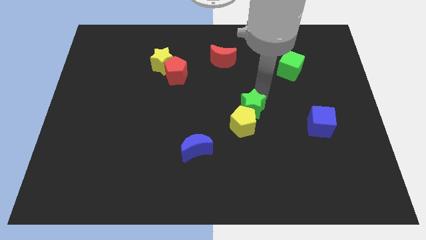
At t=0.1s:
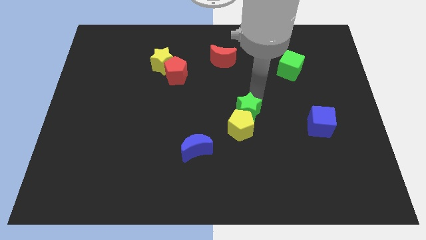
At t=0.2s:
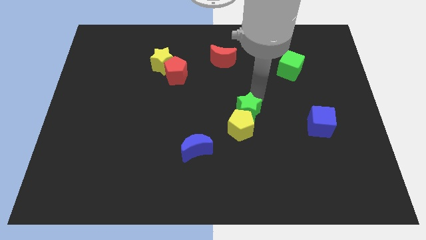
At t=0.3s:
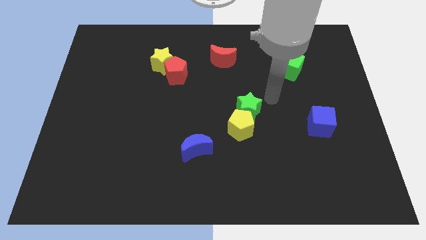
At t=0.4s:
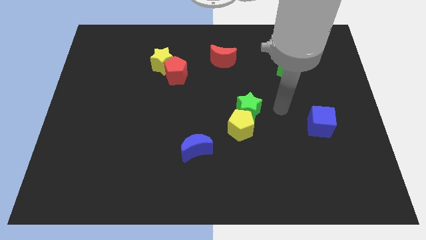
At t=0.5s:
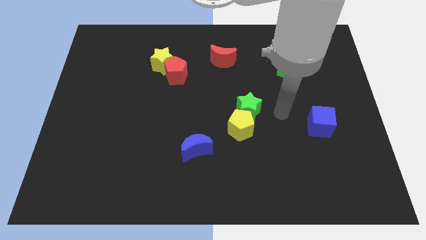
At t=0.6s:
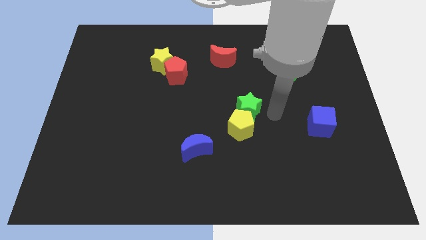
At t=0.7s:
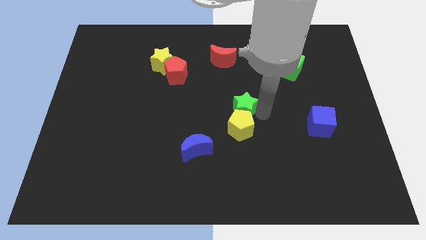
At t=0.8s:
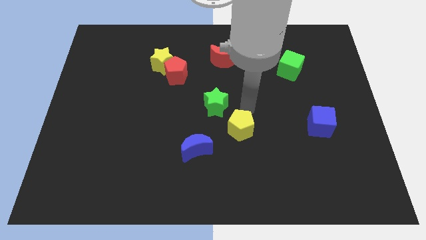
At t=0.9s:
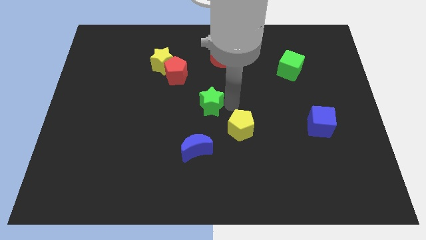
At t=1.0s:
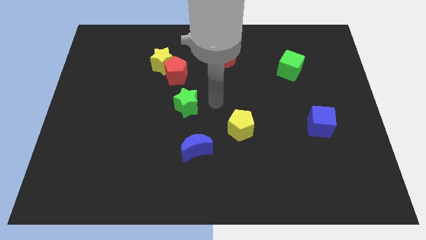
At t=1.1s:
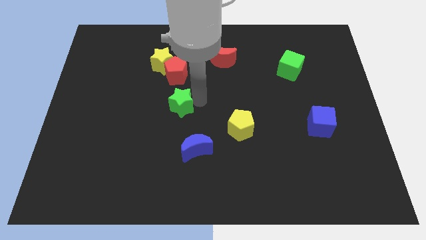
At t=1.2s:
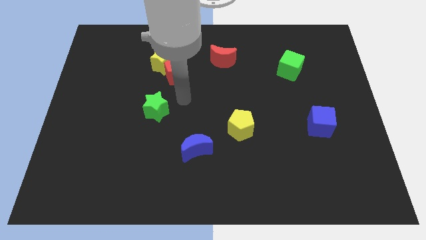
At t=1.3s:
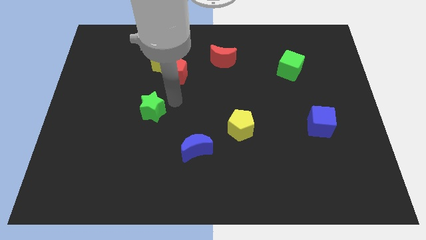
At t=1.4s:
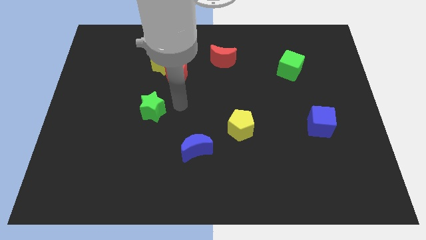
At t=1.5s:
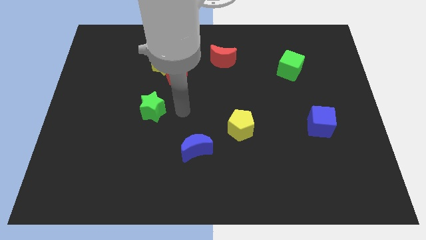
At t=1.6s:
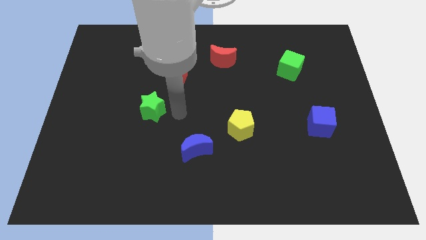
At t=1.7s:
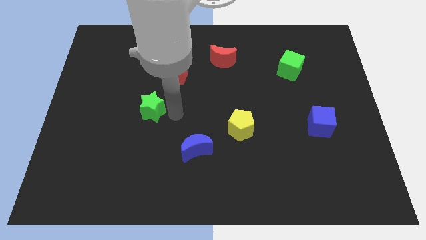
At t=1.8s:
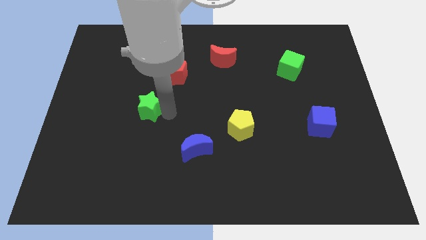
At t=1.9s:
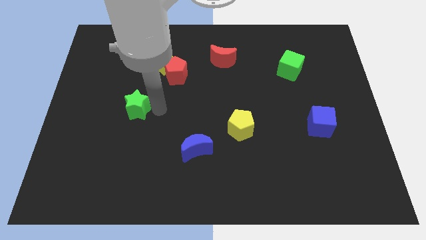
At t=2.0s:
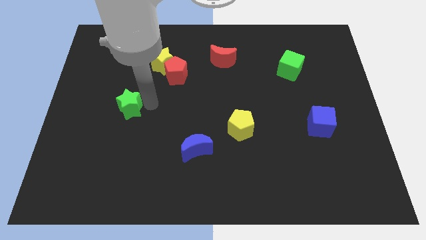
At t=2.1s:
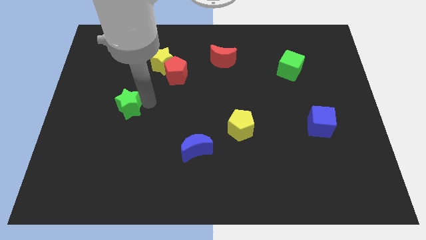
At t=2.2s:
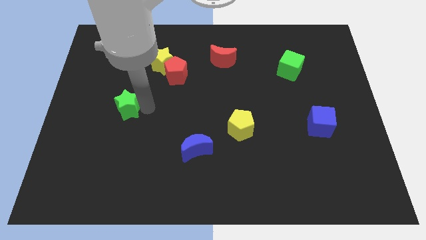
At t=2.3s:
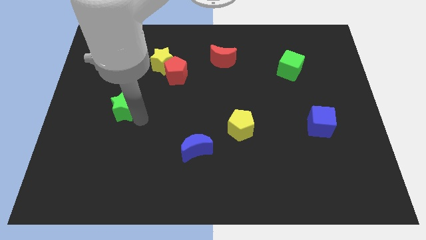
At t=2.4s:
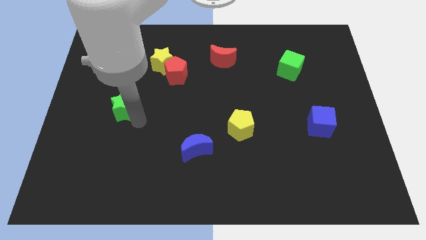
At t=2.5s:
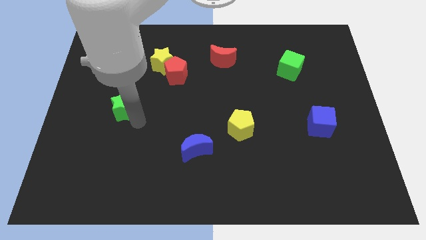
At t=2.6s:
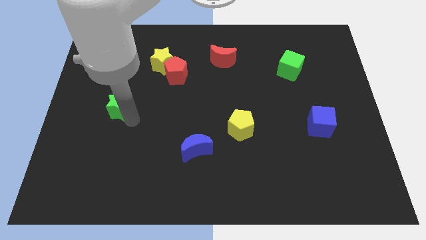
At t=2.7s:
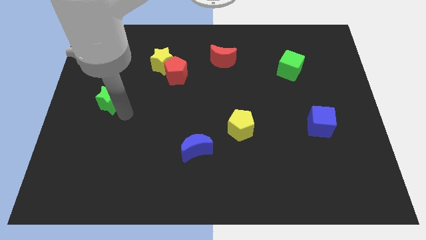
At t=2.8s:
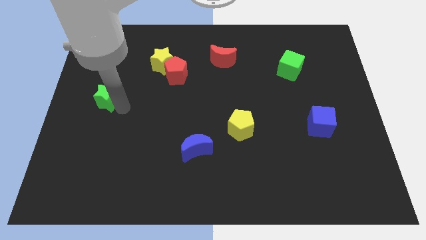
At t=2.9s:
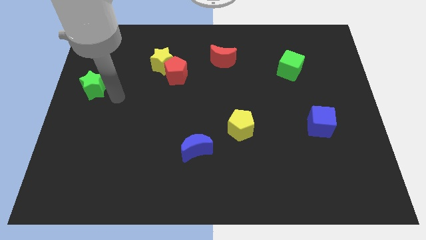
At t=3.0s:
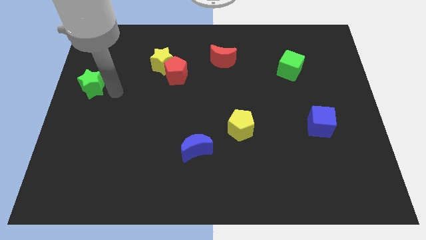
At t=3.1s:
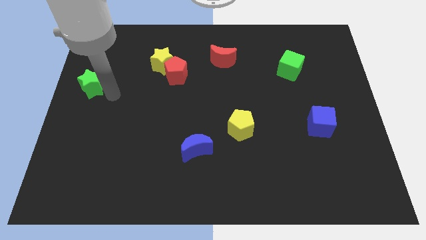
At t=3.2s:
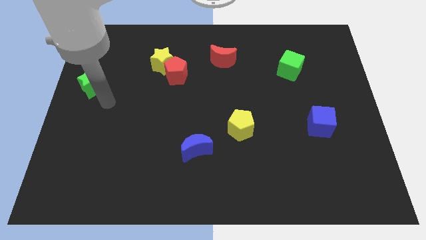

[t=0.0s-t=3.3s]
move the green star away from the yellow pentagon

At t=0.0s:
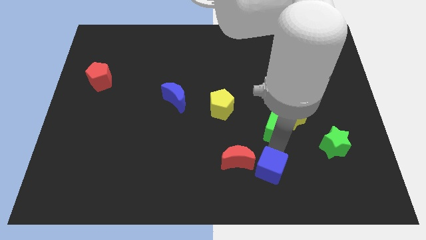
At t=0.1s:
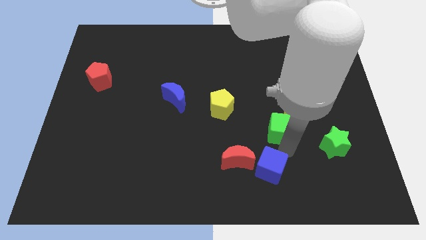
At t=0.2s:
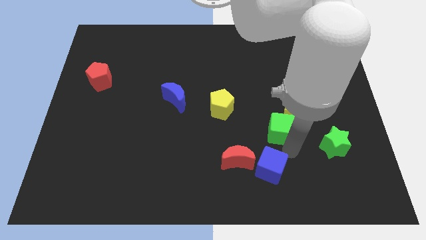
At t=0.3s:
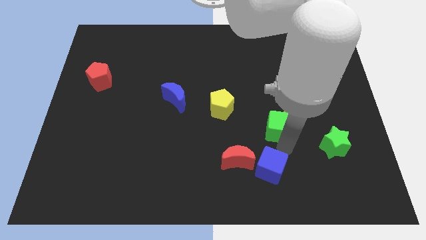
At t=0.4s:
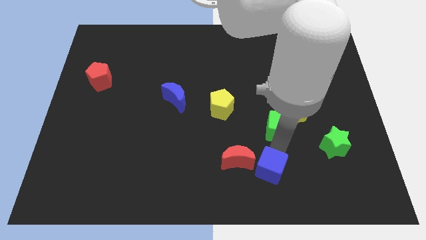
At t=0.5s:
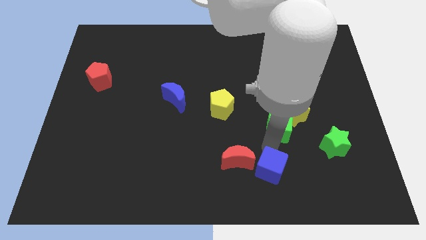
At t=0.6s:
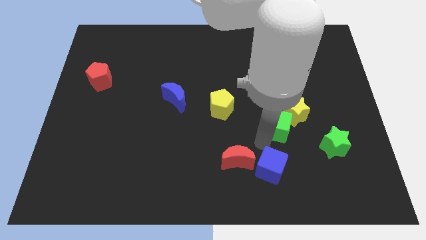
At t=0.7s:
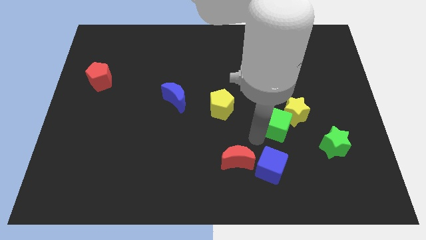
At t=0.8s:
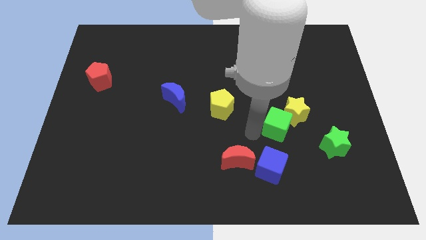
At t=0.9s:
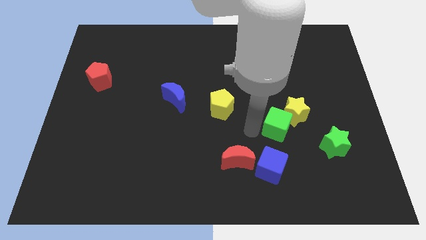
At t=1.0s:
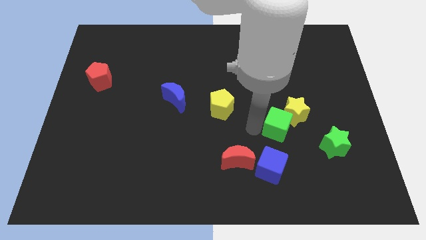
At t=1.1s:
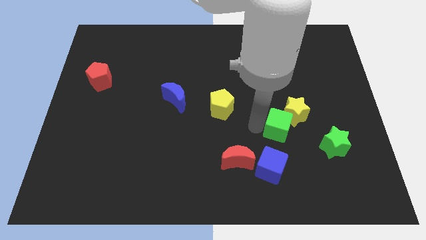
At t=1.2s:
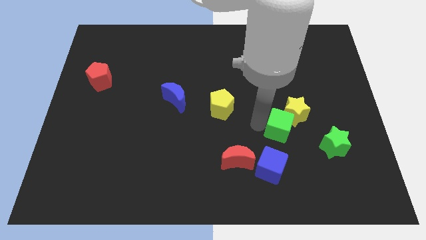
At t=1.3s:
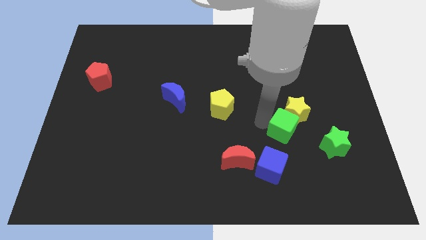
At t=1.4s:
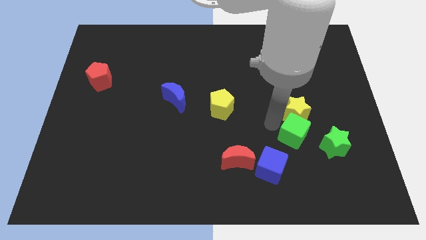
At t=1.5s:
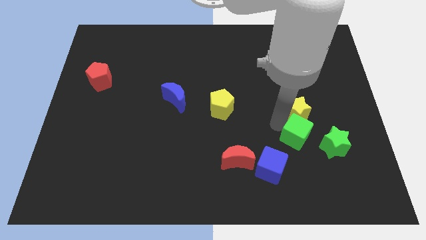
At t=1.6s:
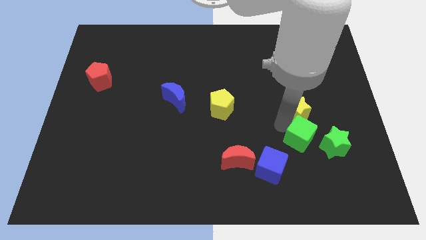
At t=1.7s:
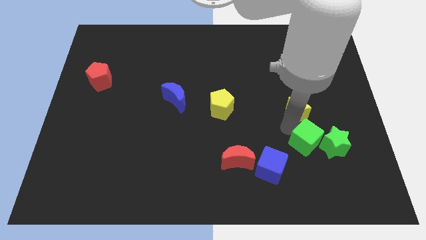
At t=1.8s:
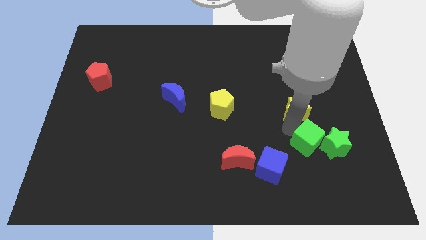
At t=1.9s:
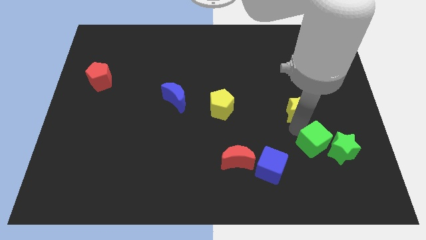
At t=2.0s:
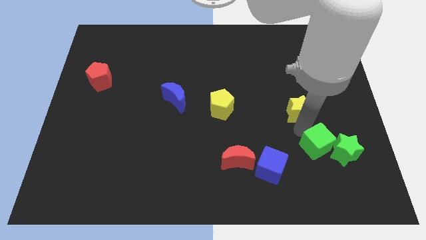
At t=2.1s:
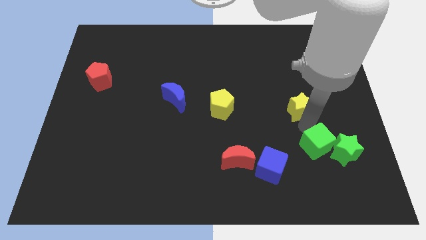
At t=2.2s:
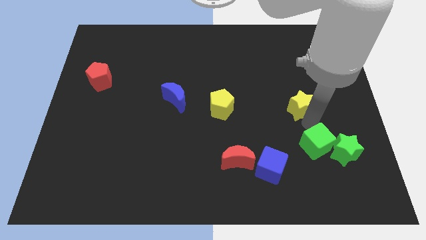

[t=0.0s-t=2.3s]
push the green cube into green star

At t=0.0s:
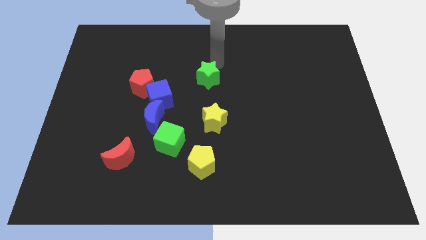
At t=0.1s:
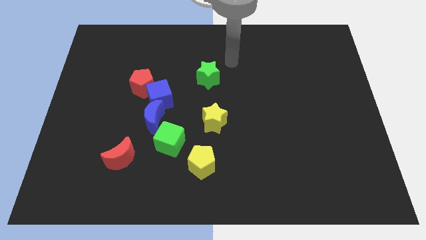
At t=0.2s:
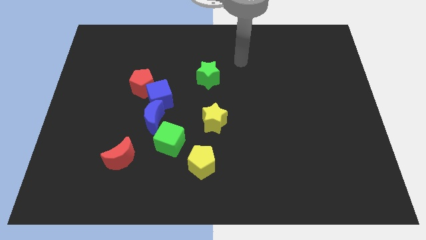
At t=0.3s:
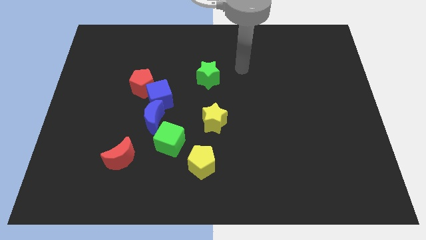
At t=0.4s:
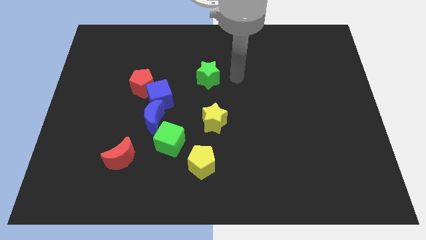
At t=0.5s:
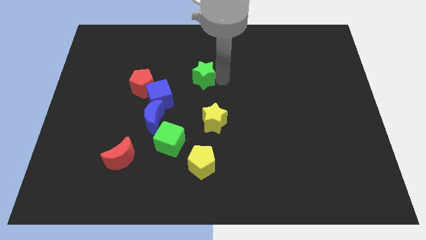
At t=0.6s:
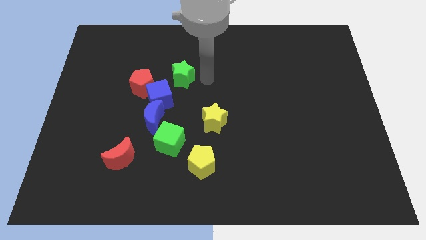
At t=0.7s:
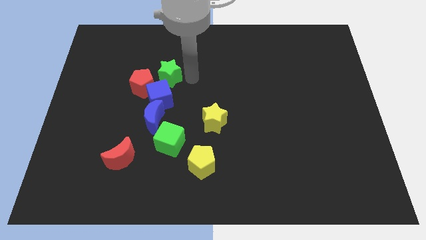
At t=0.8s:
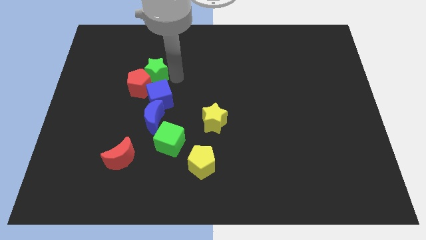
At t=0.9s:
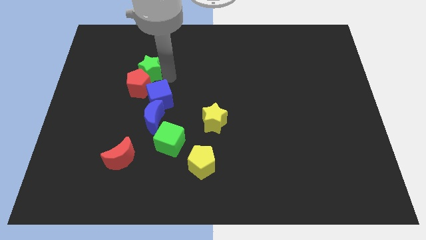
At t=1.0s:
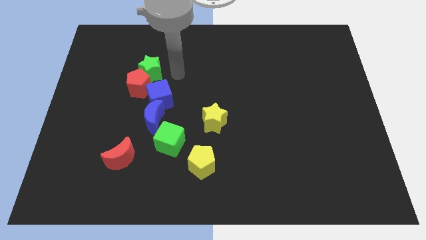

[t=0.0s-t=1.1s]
push green star into red pentagon

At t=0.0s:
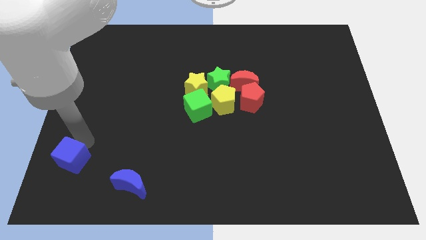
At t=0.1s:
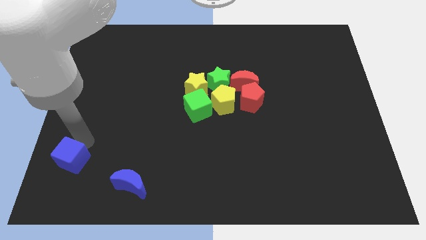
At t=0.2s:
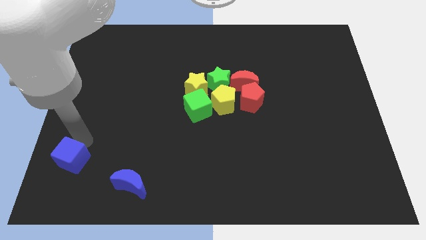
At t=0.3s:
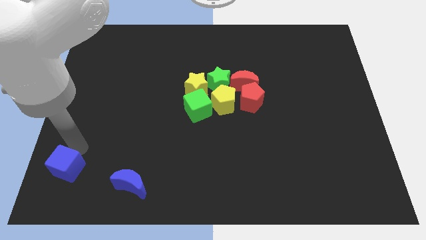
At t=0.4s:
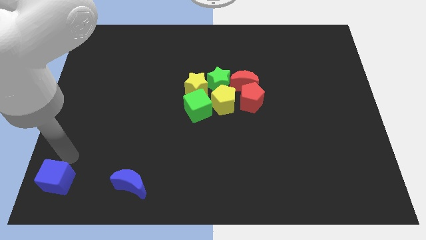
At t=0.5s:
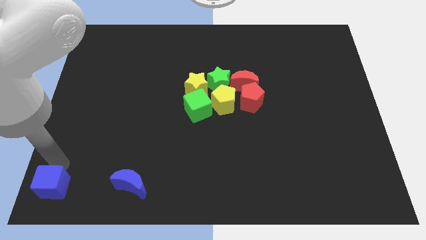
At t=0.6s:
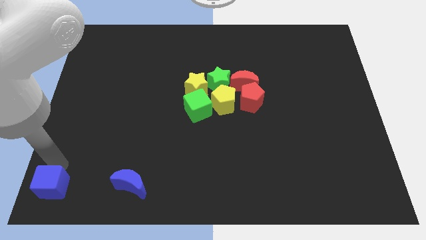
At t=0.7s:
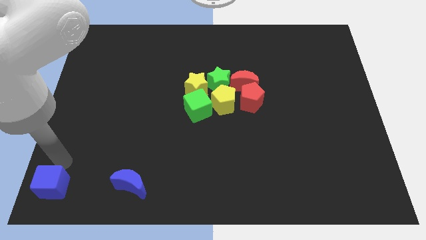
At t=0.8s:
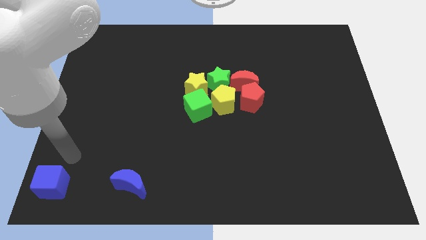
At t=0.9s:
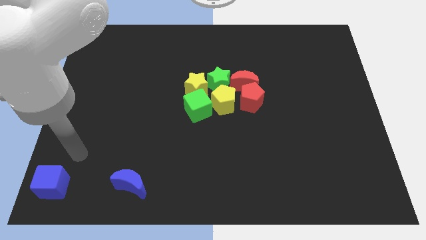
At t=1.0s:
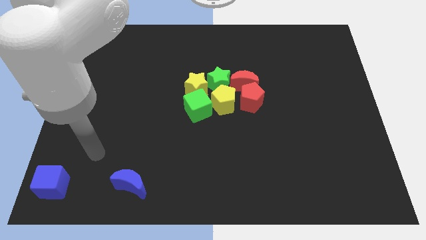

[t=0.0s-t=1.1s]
push the blue cube towards the bottom left corner

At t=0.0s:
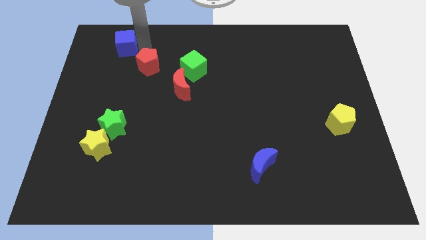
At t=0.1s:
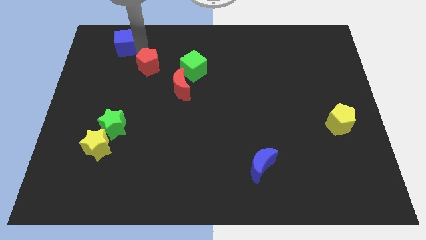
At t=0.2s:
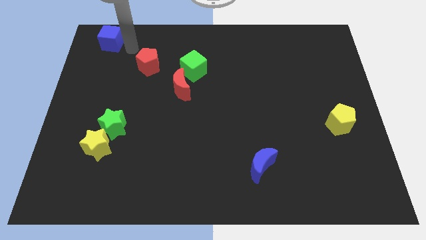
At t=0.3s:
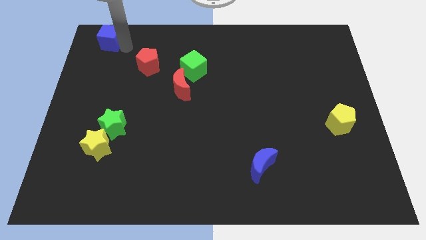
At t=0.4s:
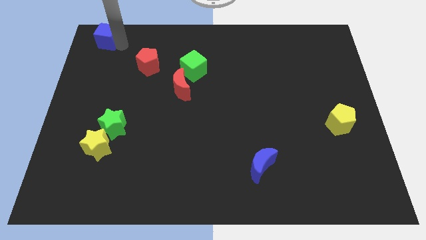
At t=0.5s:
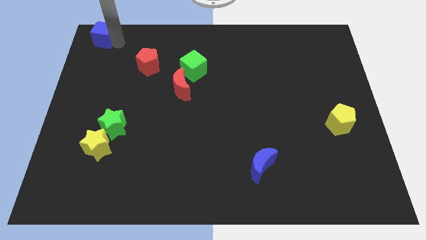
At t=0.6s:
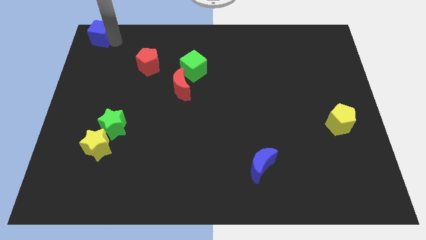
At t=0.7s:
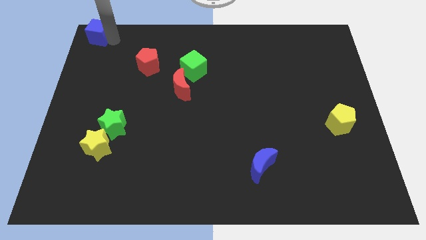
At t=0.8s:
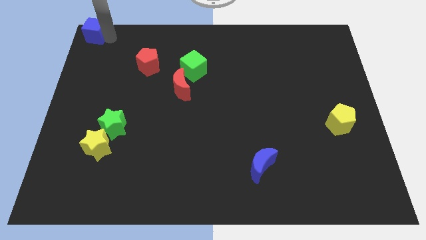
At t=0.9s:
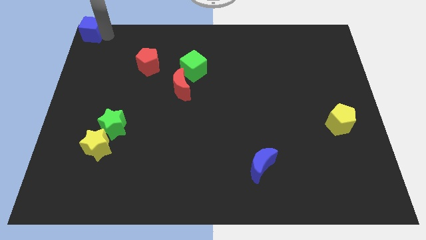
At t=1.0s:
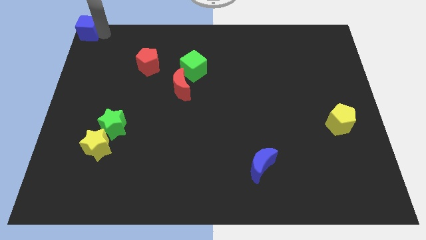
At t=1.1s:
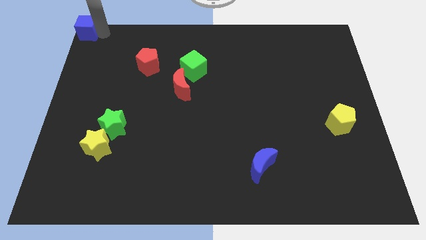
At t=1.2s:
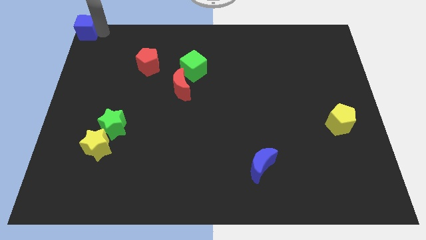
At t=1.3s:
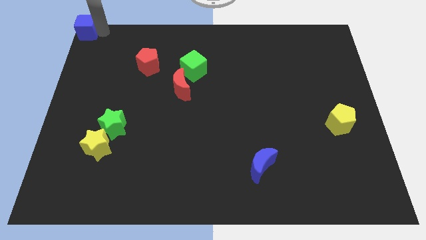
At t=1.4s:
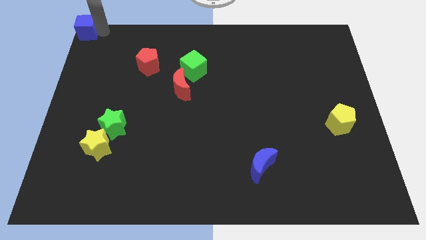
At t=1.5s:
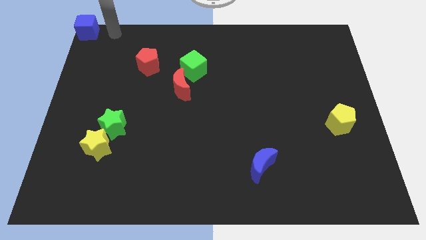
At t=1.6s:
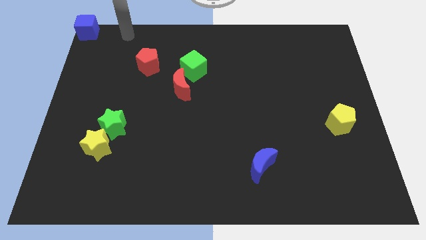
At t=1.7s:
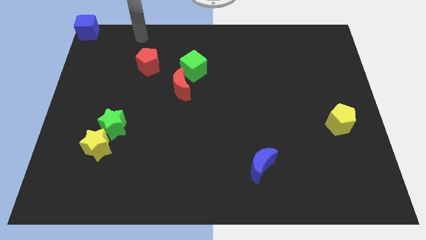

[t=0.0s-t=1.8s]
move the blue cube at the top left corner of the board
